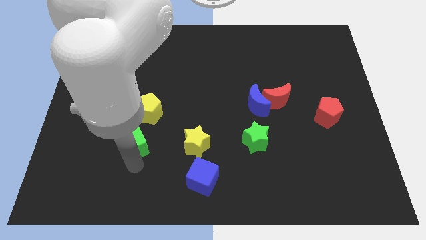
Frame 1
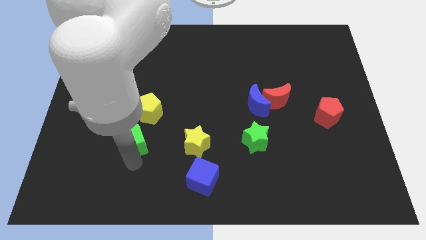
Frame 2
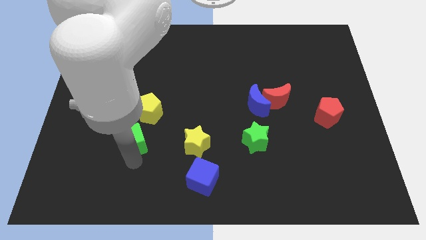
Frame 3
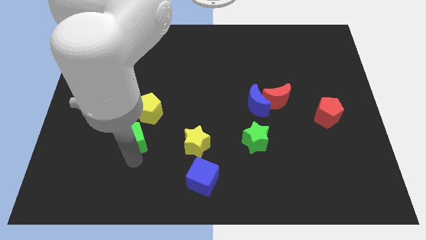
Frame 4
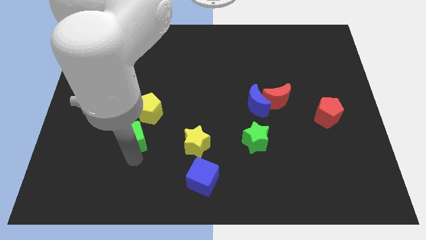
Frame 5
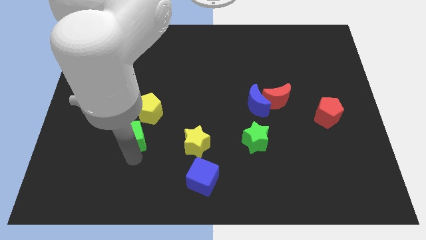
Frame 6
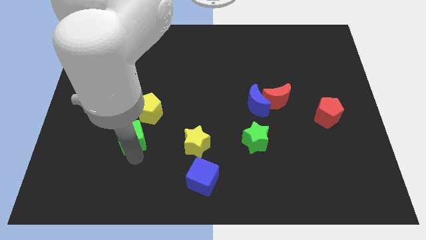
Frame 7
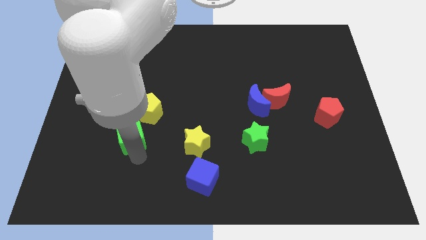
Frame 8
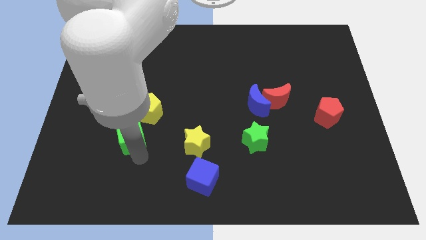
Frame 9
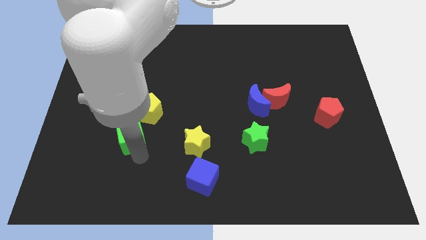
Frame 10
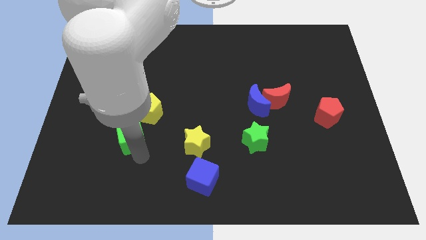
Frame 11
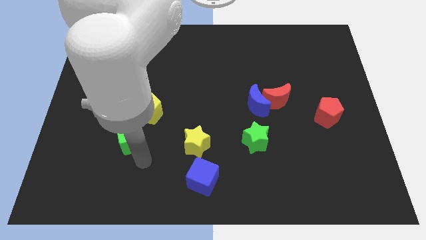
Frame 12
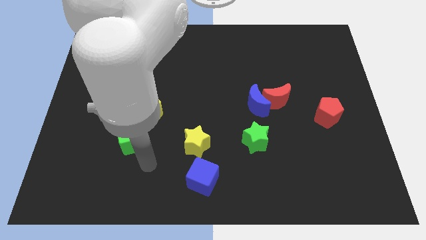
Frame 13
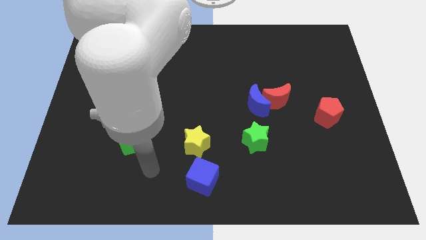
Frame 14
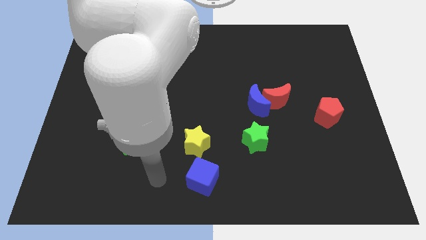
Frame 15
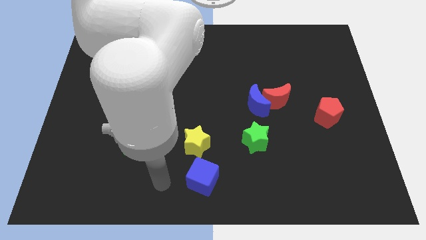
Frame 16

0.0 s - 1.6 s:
place the green cube at the bottom left side of yellow pentagon

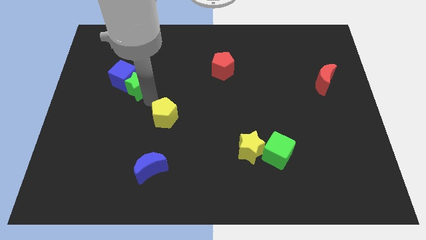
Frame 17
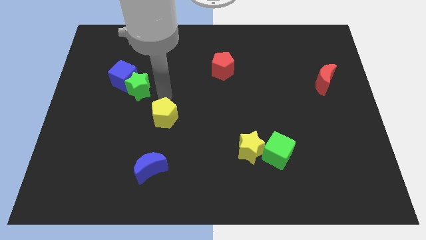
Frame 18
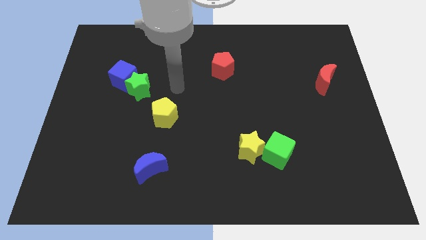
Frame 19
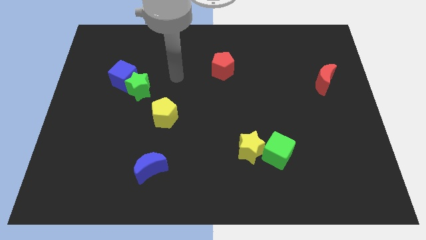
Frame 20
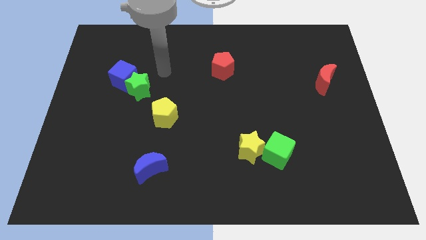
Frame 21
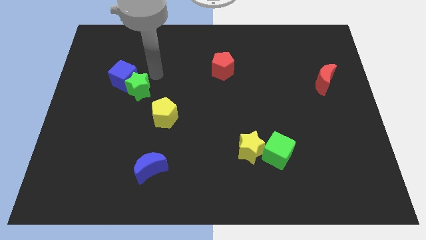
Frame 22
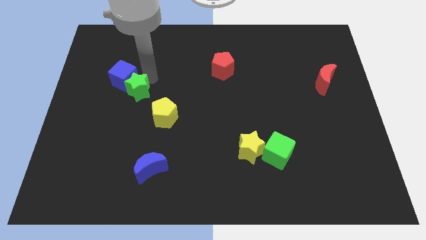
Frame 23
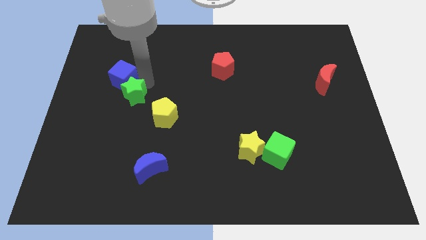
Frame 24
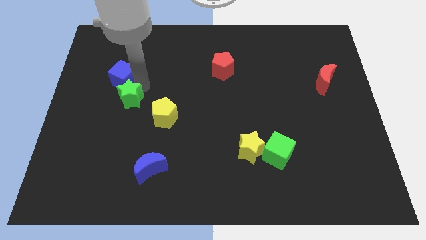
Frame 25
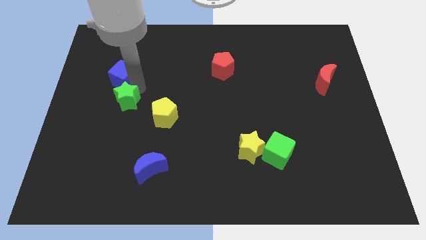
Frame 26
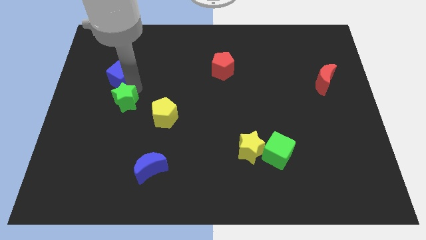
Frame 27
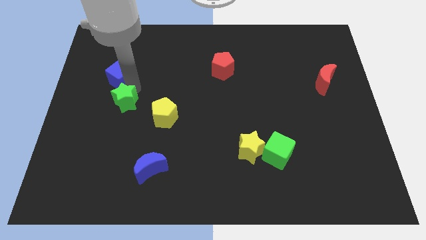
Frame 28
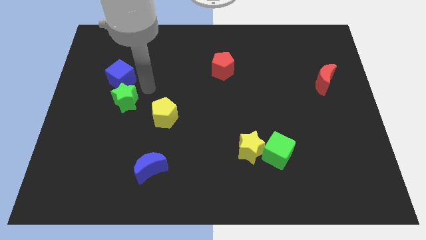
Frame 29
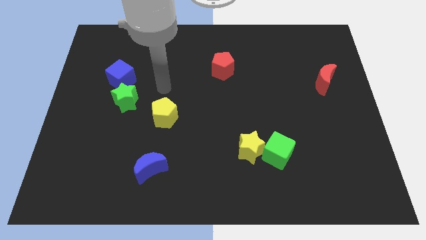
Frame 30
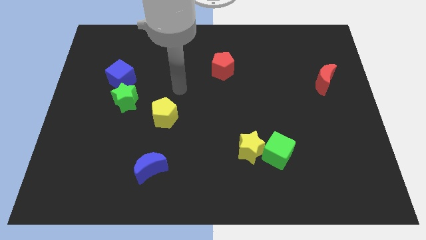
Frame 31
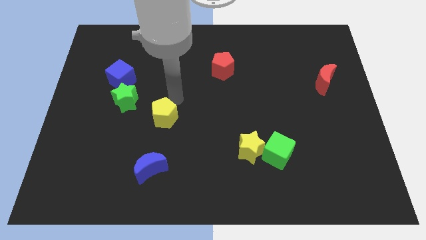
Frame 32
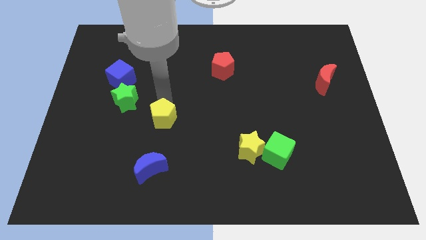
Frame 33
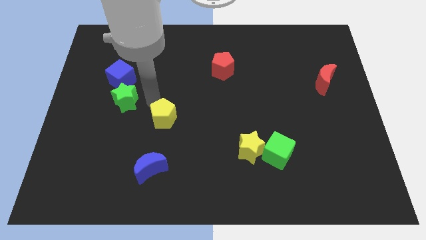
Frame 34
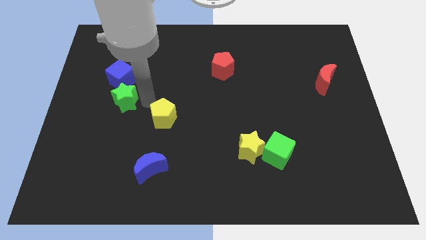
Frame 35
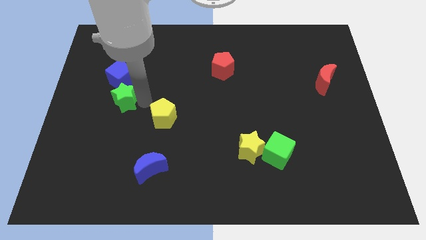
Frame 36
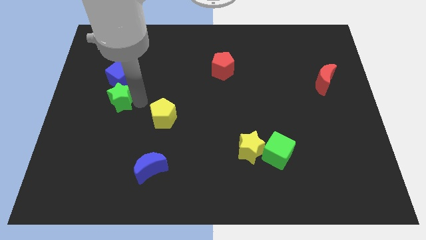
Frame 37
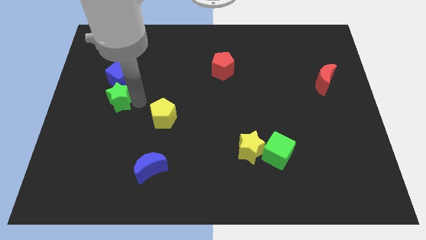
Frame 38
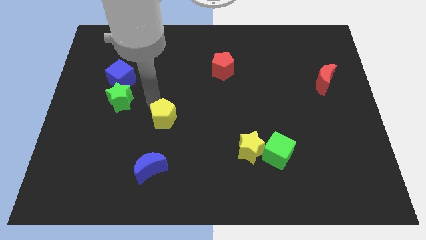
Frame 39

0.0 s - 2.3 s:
place the green star towards center left

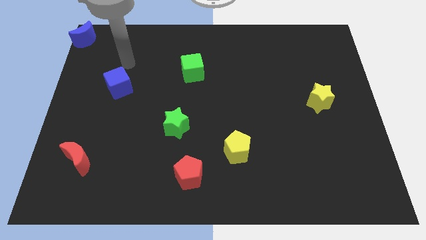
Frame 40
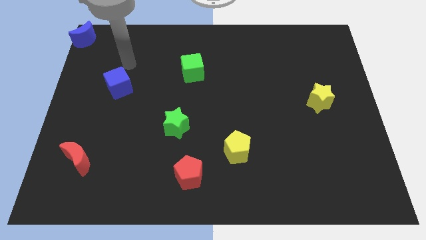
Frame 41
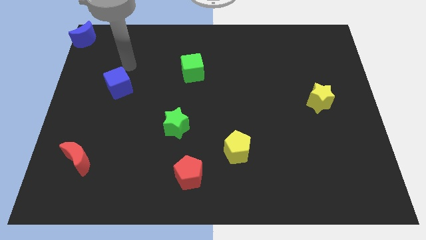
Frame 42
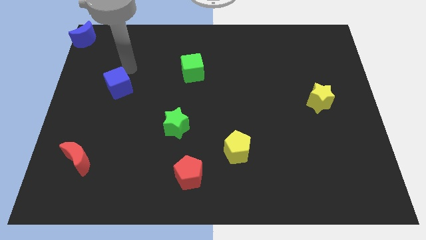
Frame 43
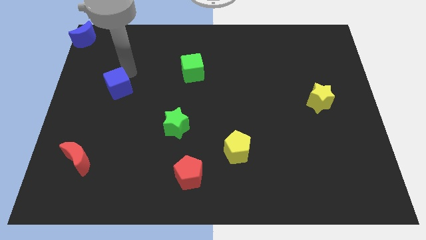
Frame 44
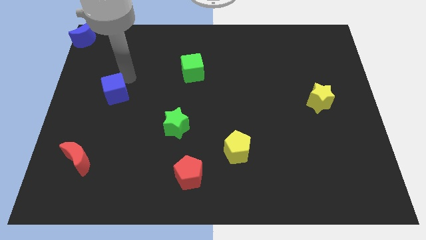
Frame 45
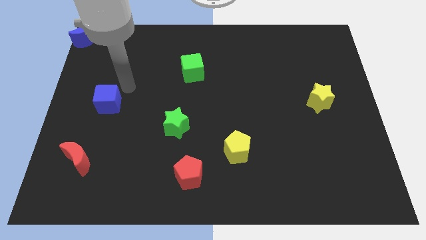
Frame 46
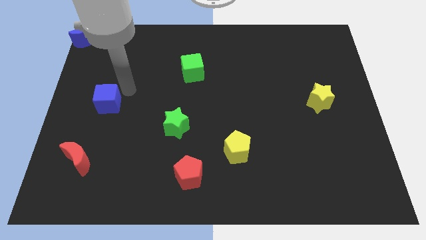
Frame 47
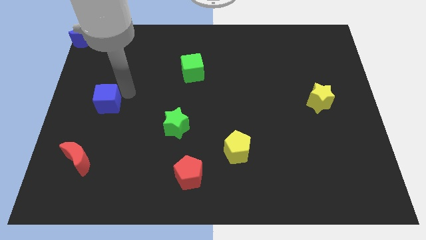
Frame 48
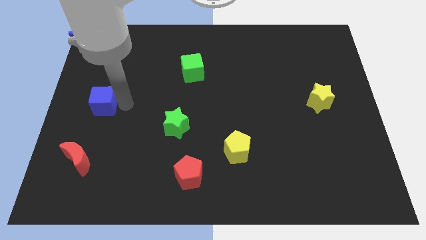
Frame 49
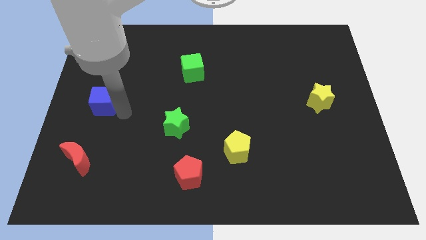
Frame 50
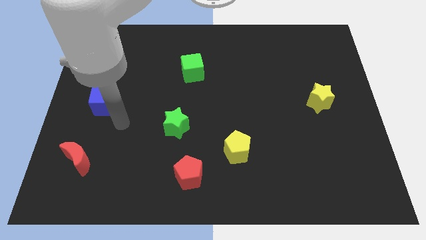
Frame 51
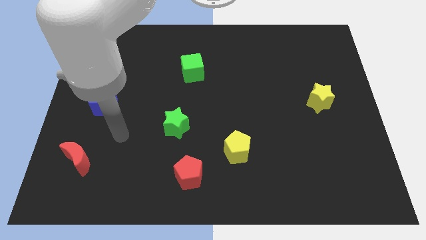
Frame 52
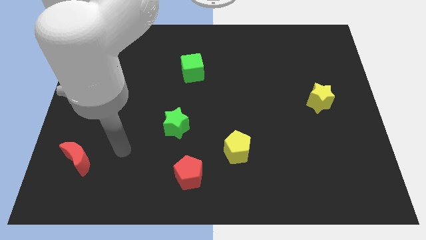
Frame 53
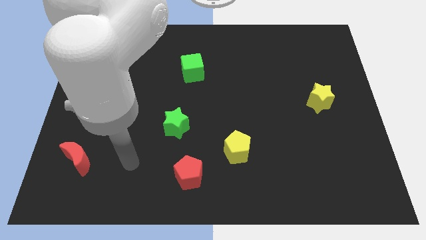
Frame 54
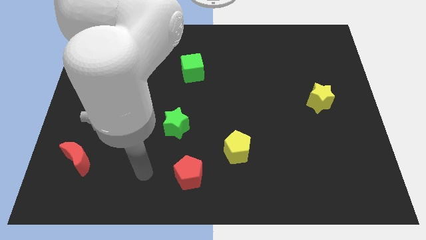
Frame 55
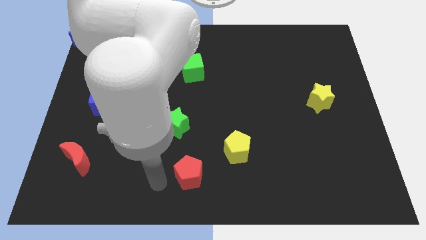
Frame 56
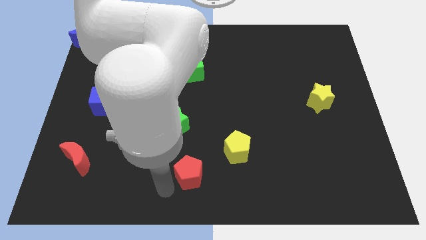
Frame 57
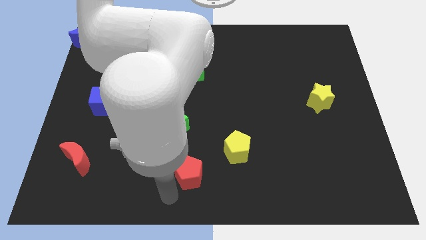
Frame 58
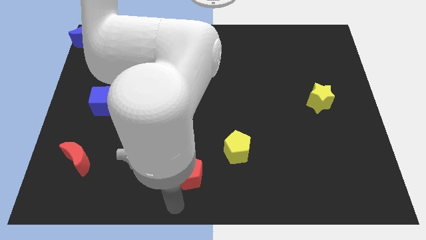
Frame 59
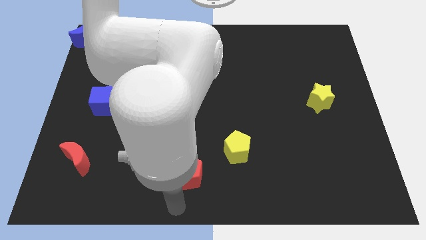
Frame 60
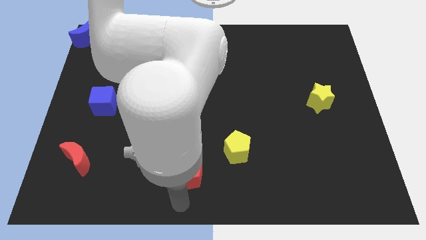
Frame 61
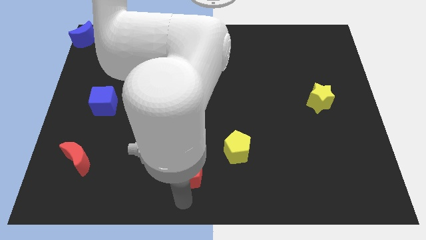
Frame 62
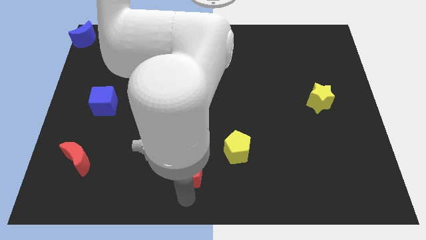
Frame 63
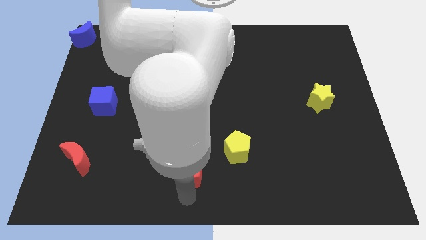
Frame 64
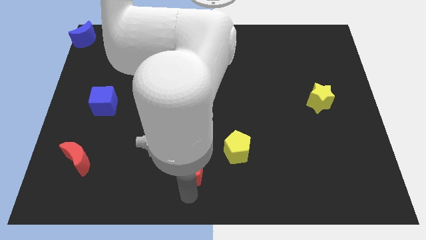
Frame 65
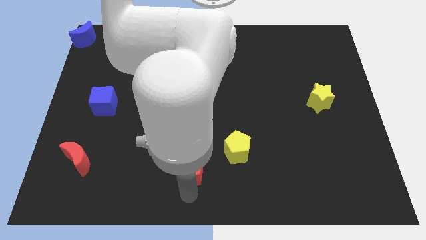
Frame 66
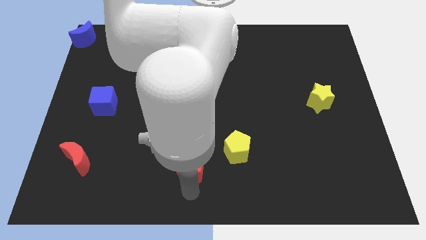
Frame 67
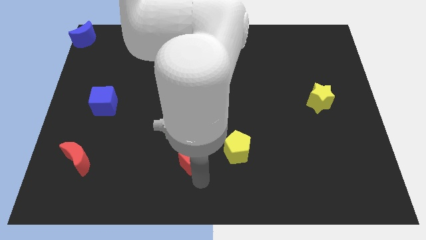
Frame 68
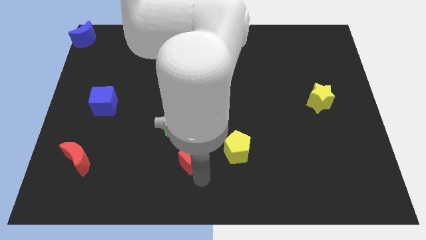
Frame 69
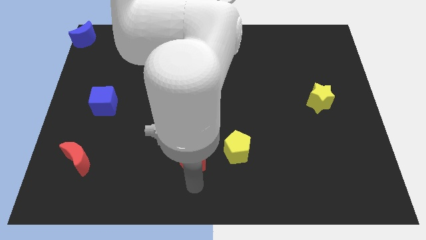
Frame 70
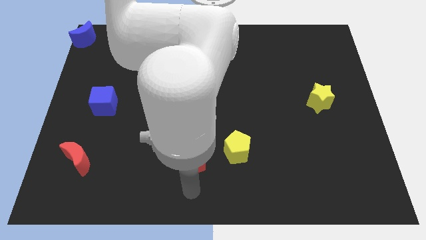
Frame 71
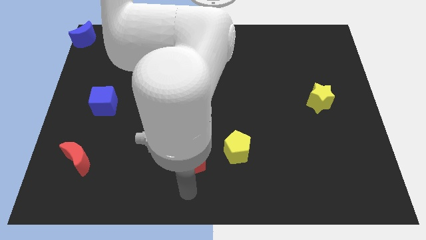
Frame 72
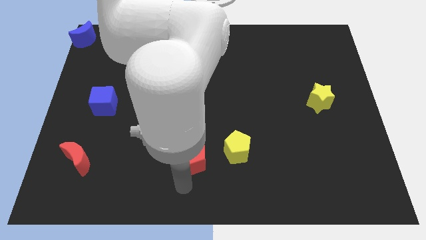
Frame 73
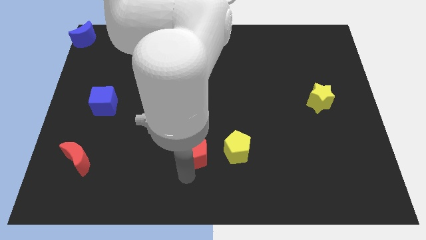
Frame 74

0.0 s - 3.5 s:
move the red pentagon up slightly

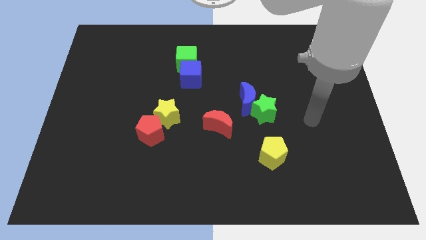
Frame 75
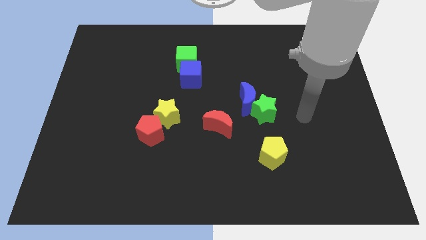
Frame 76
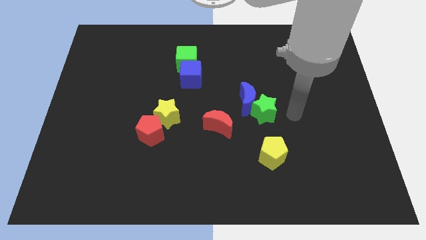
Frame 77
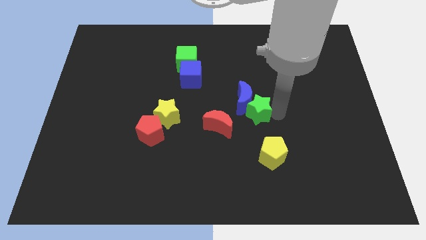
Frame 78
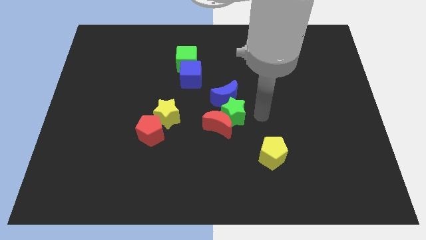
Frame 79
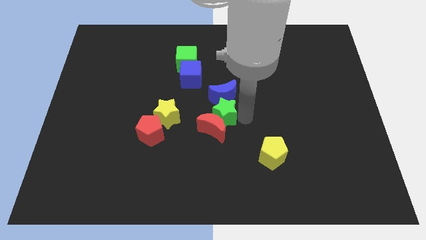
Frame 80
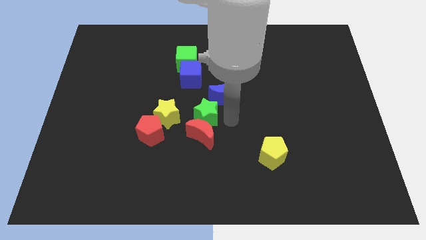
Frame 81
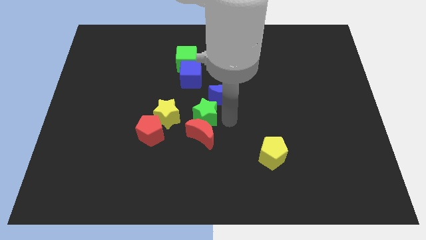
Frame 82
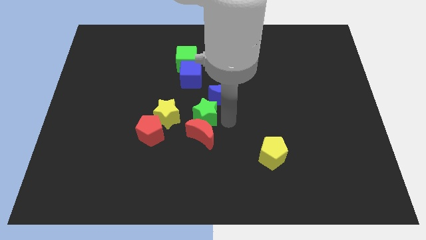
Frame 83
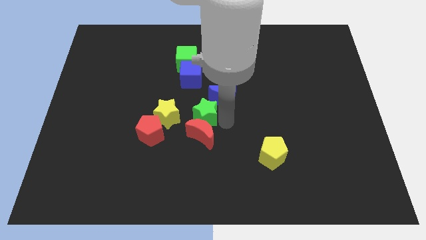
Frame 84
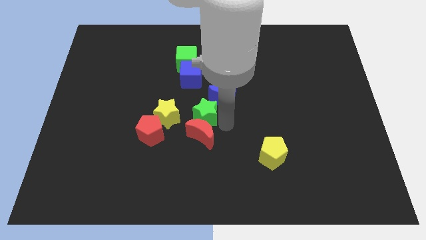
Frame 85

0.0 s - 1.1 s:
place green star above the red crescent

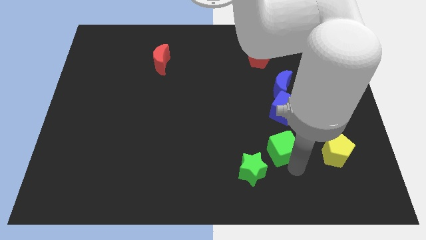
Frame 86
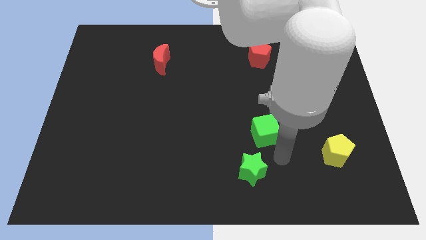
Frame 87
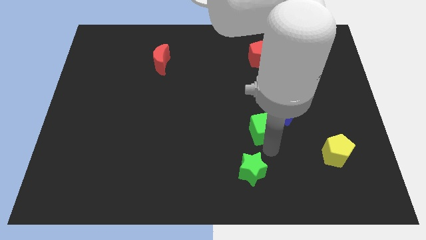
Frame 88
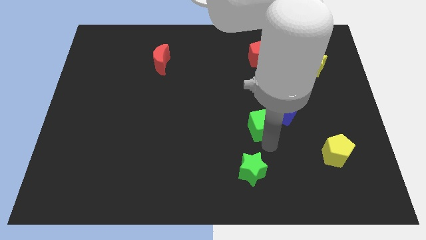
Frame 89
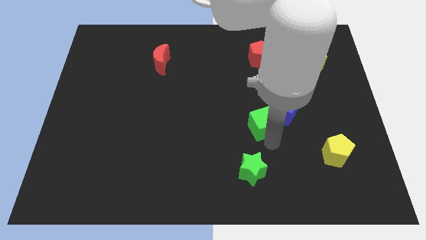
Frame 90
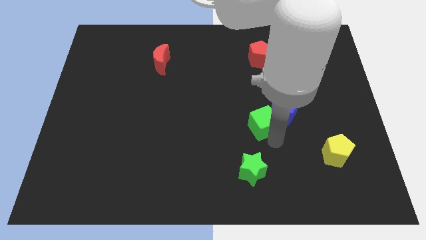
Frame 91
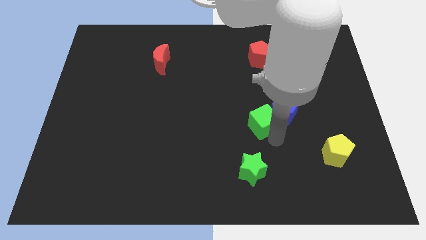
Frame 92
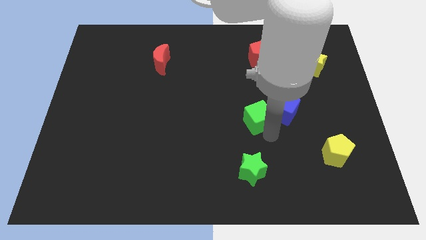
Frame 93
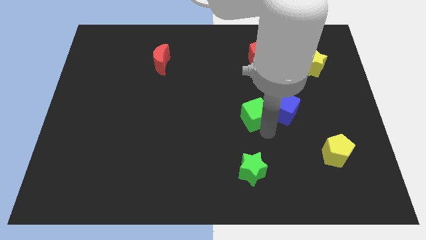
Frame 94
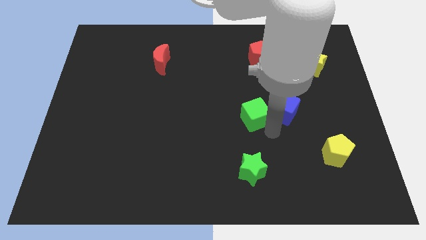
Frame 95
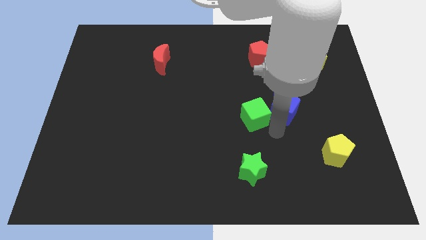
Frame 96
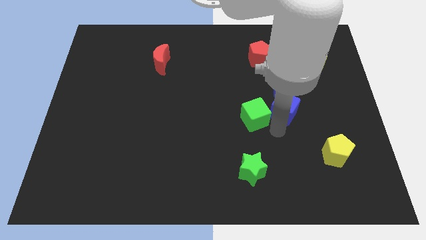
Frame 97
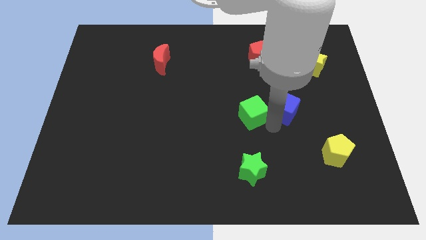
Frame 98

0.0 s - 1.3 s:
place the green cube vertically above the green star
